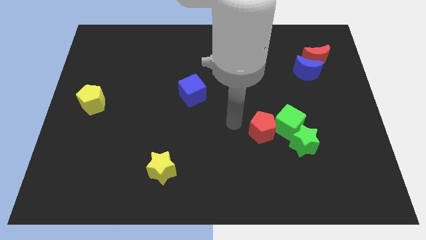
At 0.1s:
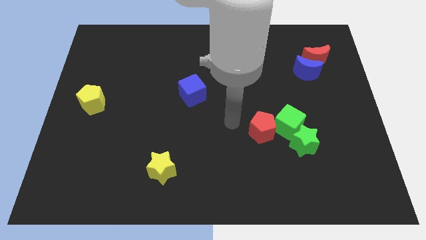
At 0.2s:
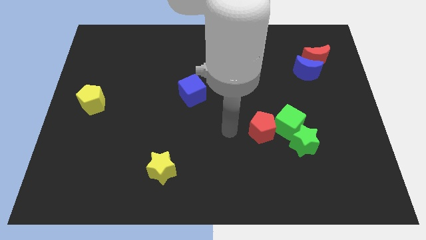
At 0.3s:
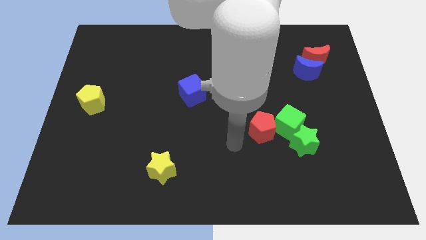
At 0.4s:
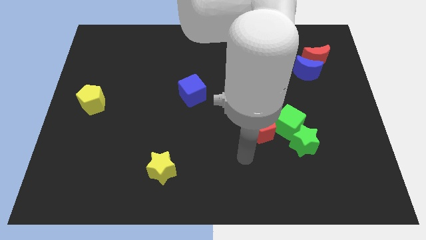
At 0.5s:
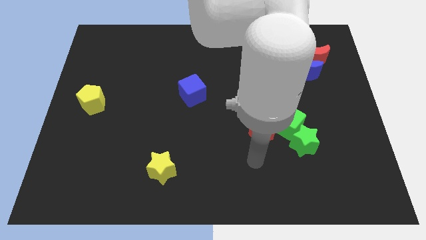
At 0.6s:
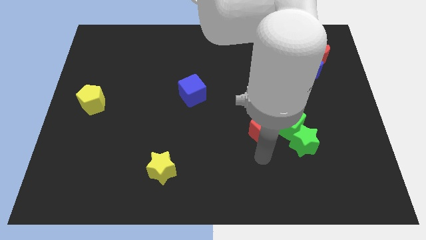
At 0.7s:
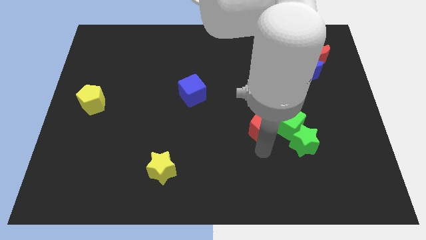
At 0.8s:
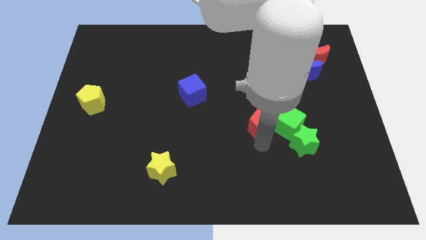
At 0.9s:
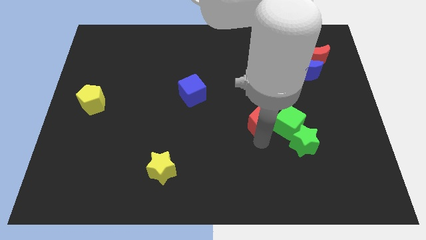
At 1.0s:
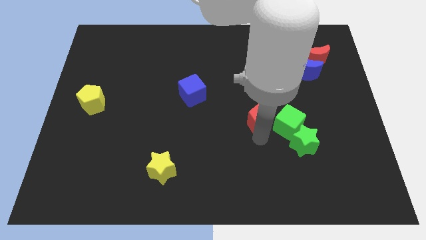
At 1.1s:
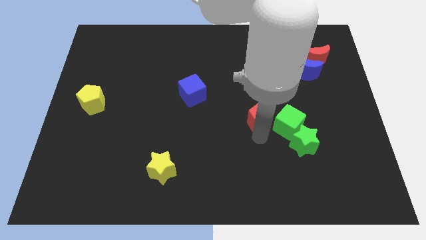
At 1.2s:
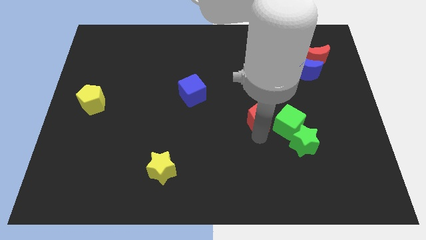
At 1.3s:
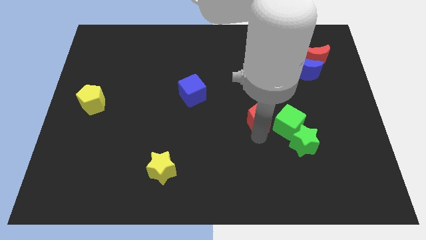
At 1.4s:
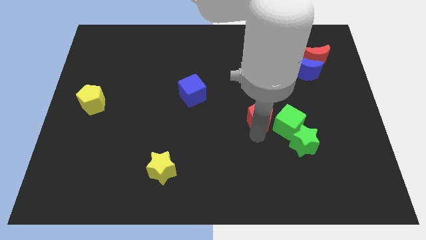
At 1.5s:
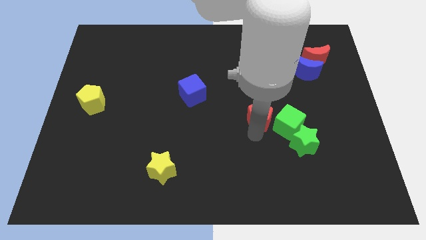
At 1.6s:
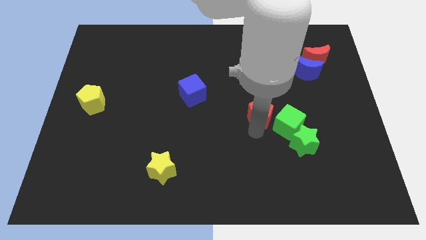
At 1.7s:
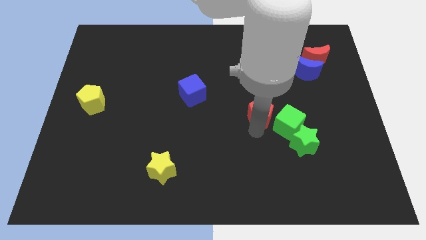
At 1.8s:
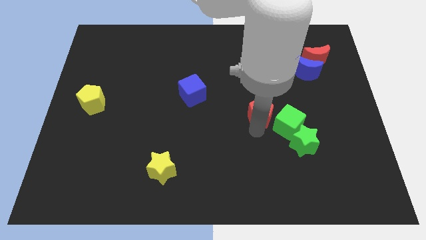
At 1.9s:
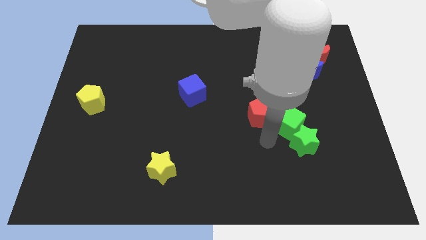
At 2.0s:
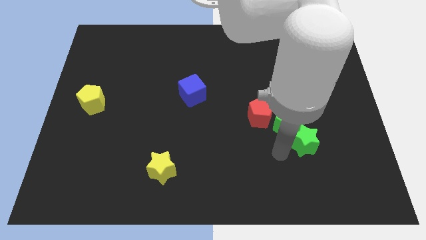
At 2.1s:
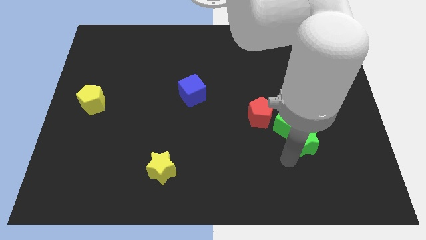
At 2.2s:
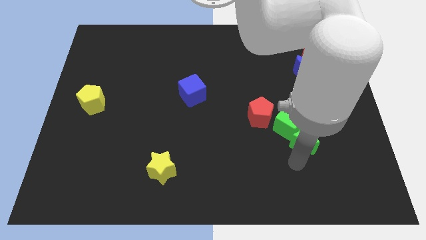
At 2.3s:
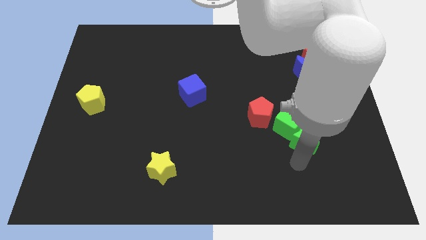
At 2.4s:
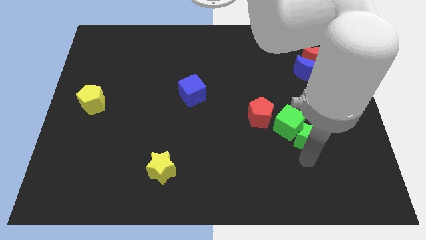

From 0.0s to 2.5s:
move the red pentagon slightly up

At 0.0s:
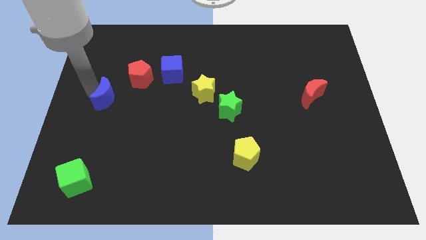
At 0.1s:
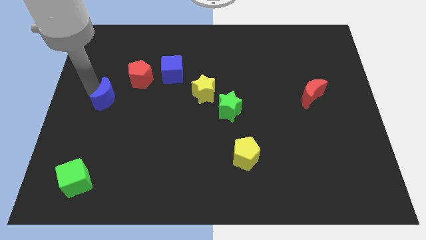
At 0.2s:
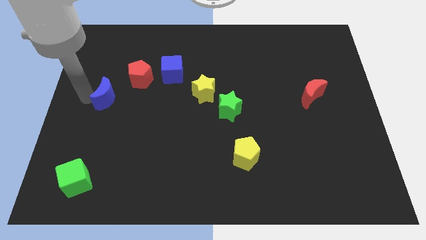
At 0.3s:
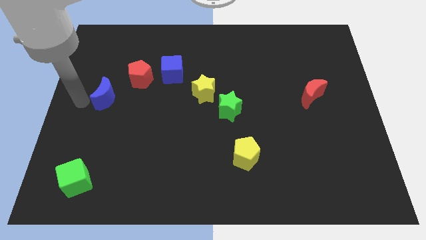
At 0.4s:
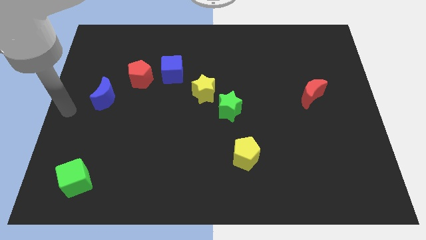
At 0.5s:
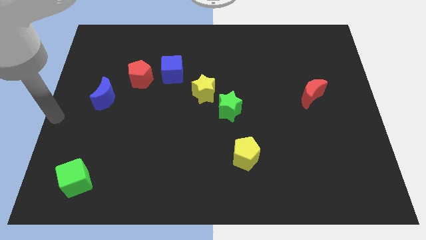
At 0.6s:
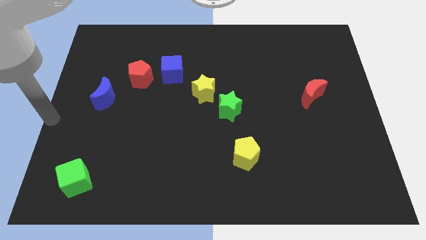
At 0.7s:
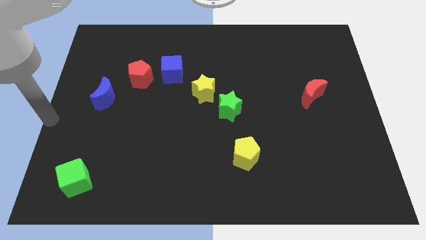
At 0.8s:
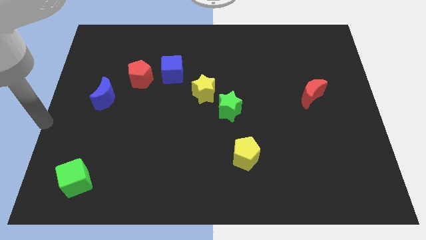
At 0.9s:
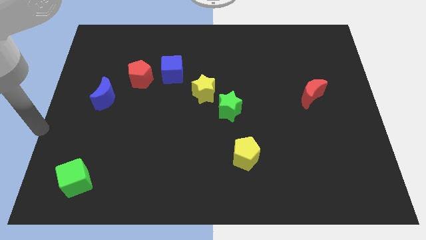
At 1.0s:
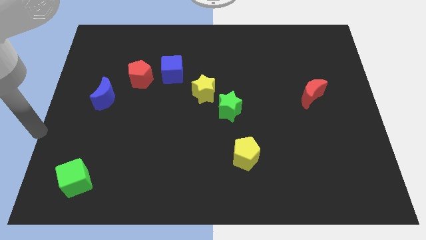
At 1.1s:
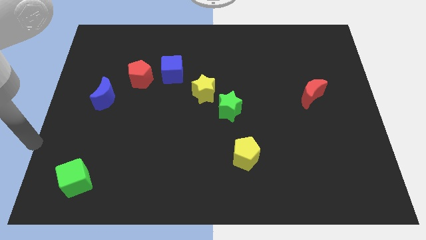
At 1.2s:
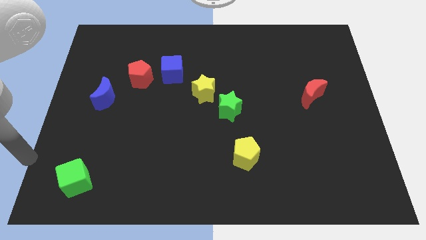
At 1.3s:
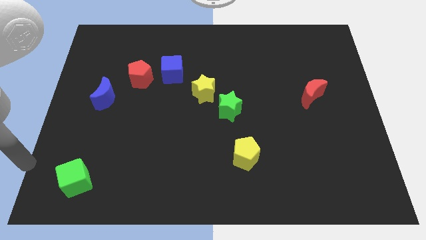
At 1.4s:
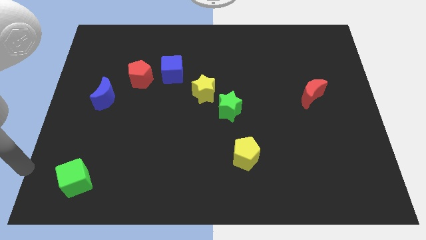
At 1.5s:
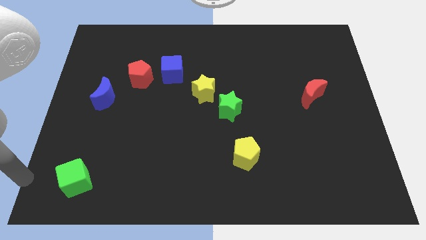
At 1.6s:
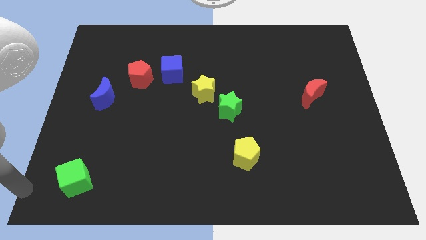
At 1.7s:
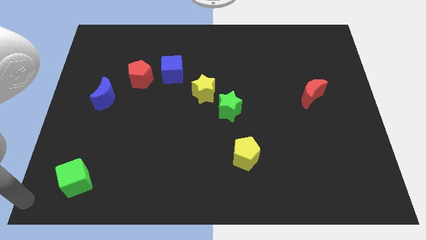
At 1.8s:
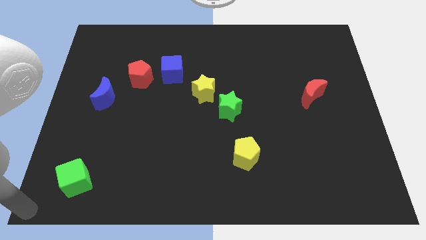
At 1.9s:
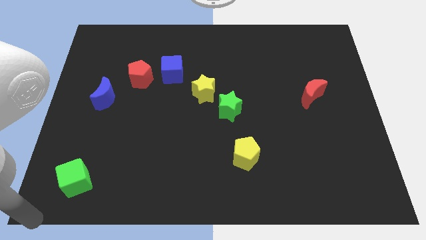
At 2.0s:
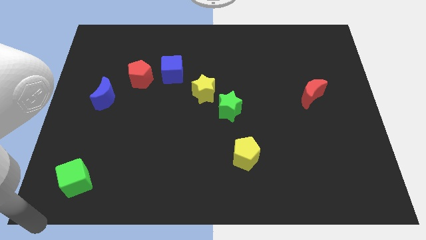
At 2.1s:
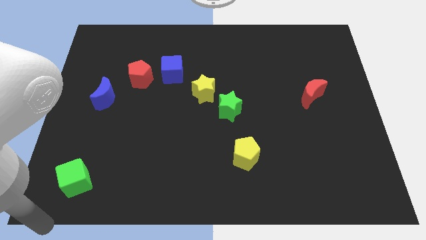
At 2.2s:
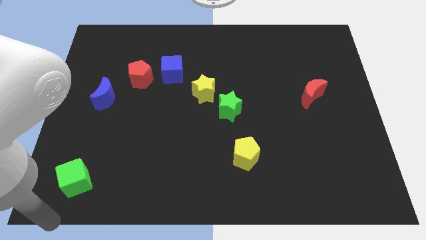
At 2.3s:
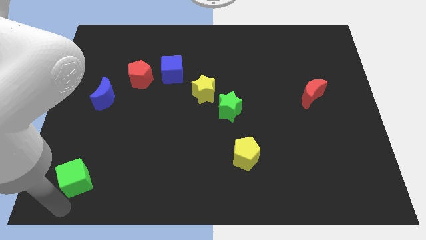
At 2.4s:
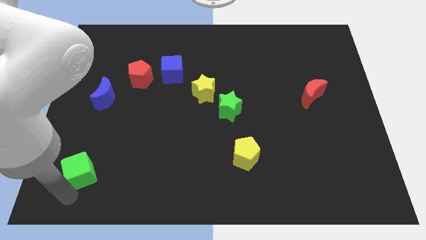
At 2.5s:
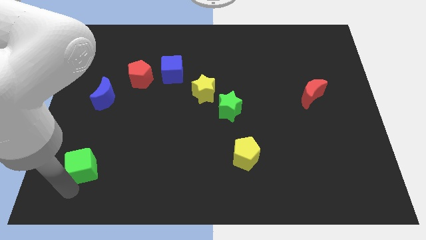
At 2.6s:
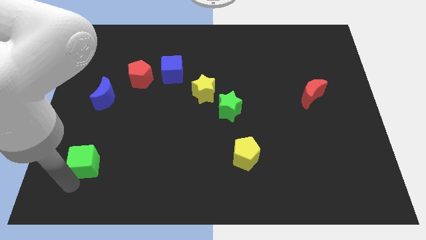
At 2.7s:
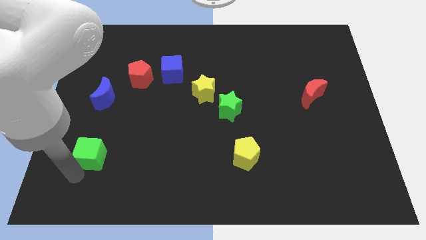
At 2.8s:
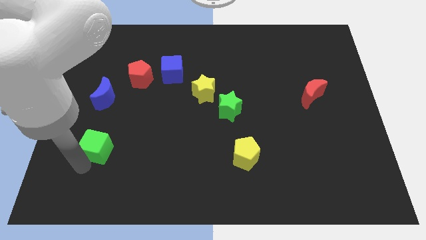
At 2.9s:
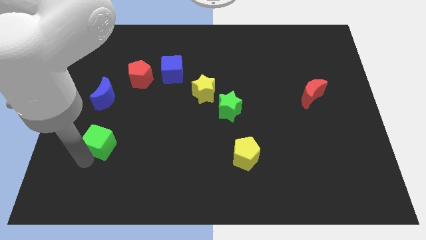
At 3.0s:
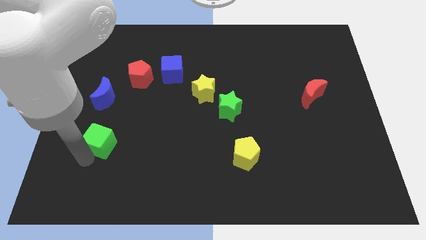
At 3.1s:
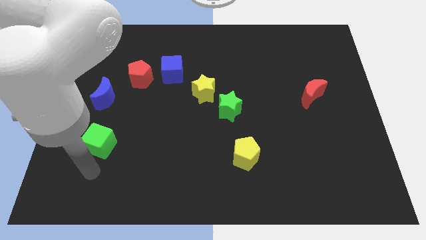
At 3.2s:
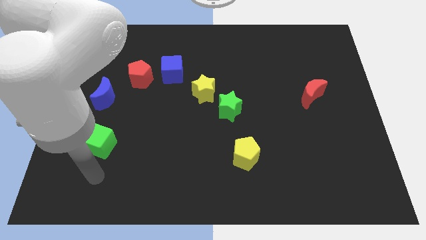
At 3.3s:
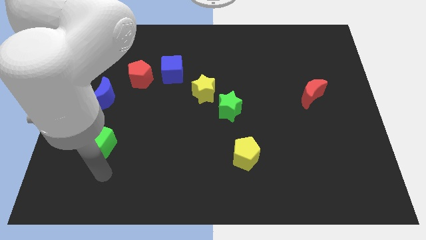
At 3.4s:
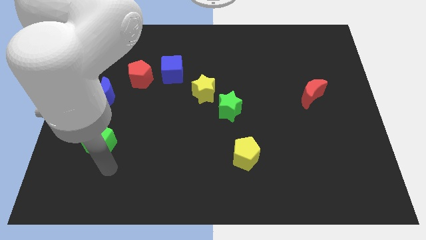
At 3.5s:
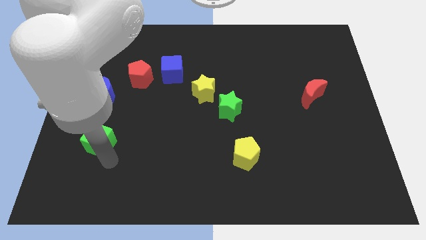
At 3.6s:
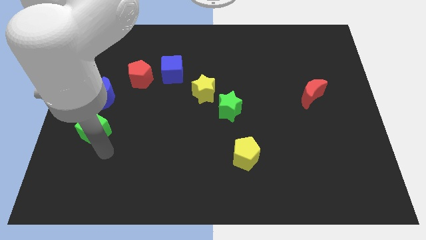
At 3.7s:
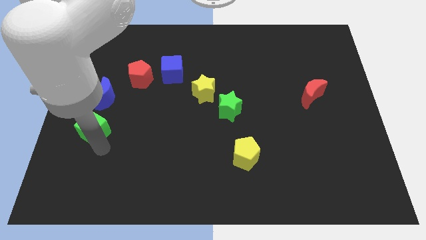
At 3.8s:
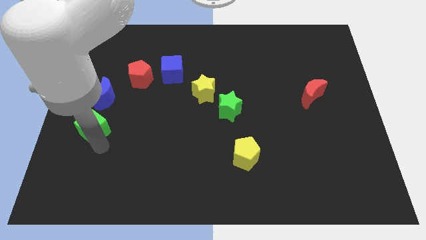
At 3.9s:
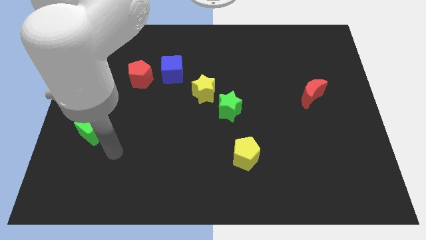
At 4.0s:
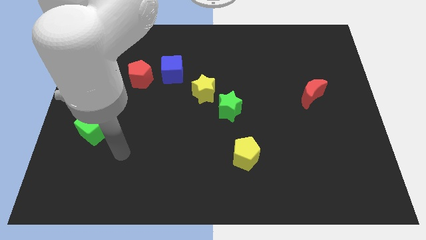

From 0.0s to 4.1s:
move the green cube to the bottom side of the blue moon

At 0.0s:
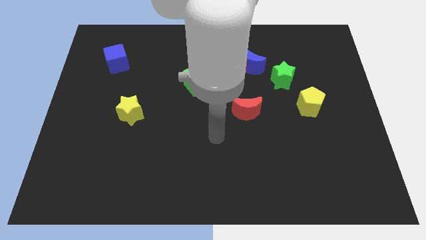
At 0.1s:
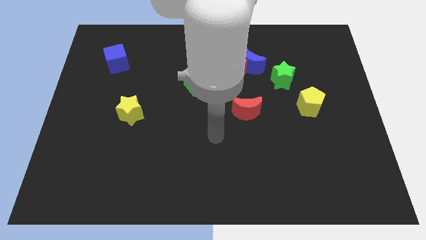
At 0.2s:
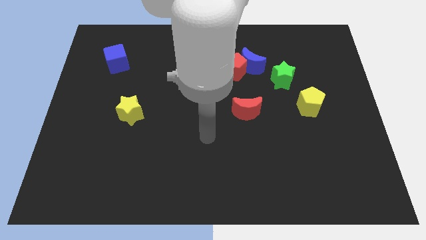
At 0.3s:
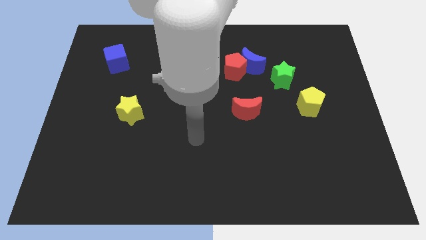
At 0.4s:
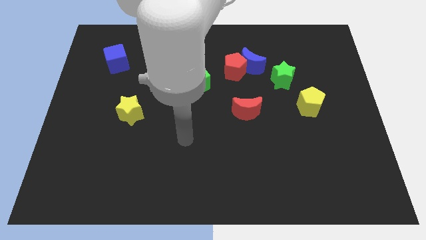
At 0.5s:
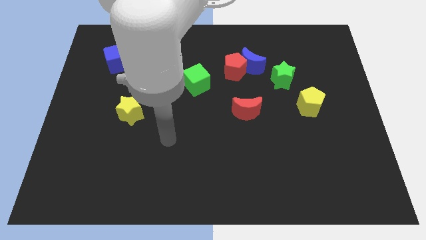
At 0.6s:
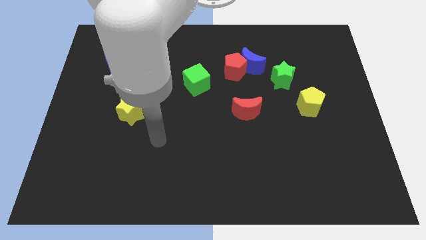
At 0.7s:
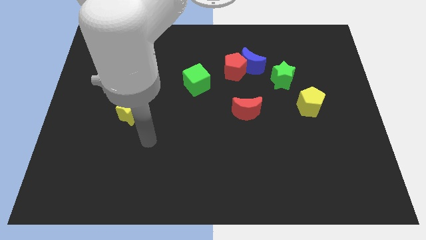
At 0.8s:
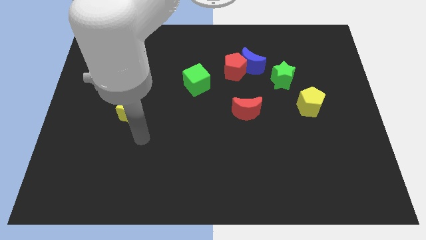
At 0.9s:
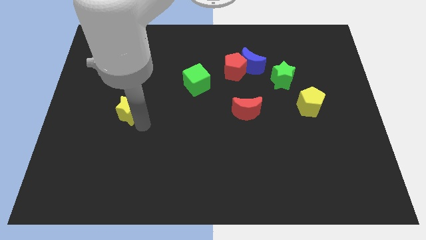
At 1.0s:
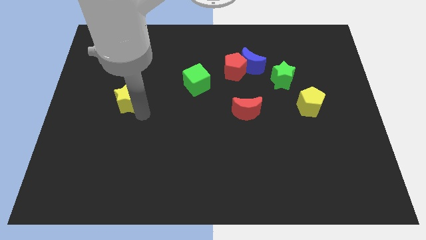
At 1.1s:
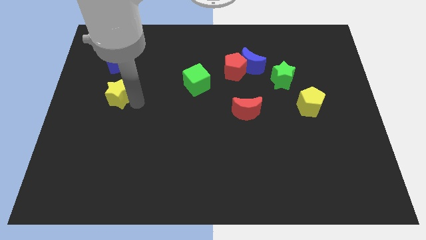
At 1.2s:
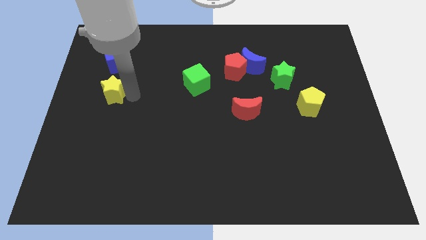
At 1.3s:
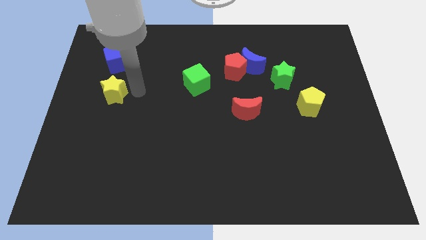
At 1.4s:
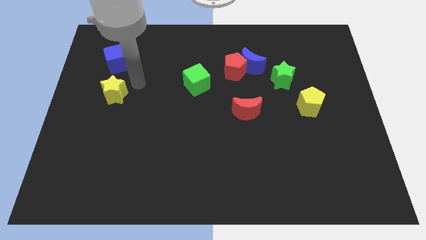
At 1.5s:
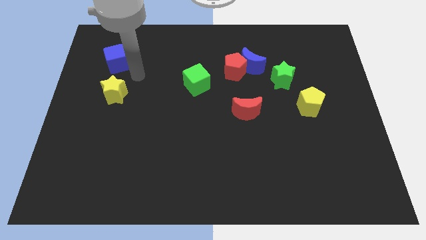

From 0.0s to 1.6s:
move the yellow star below the blue cube

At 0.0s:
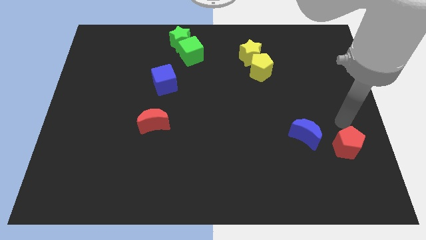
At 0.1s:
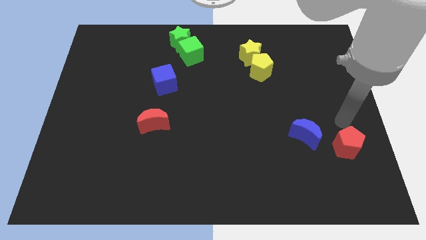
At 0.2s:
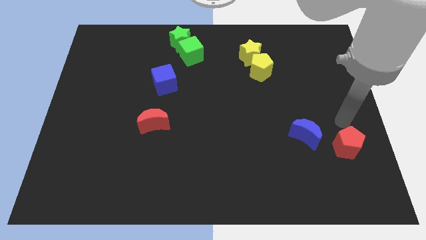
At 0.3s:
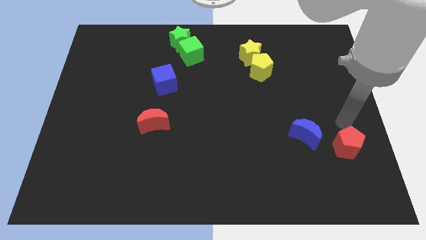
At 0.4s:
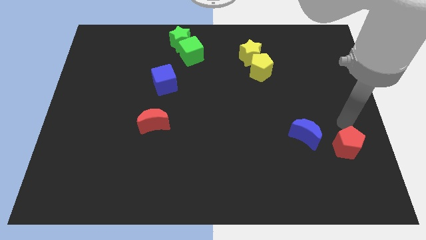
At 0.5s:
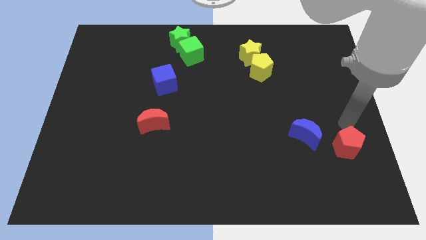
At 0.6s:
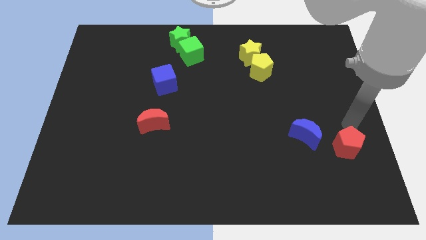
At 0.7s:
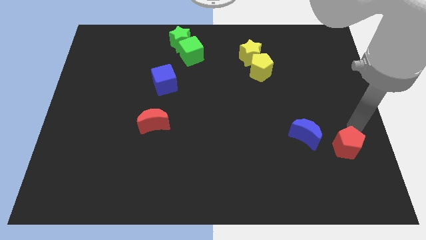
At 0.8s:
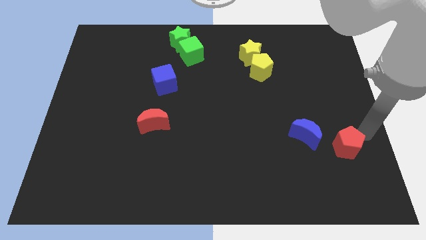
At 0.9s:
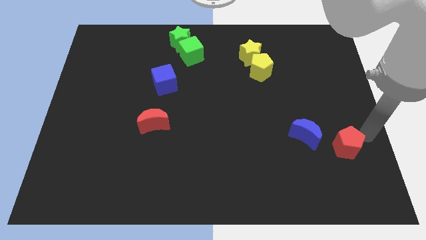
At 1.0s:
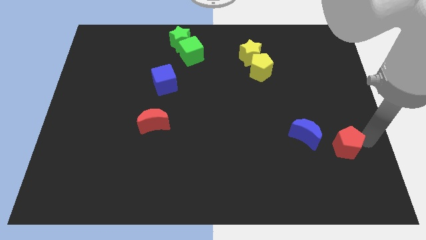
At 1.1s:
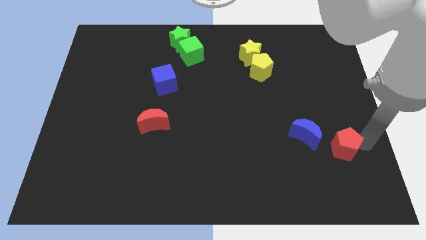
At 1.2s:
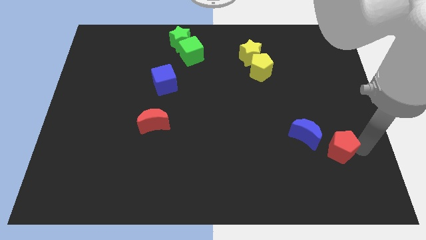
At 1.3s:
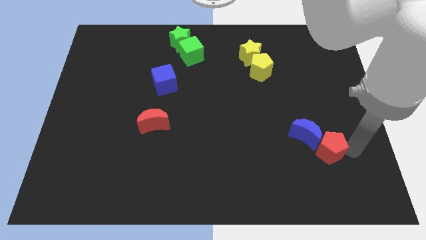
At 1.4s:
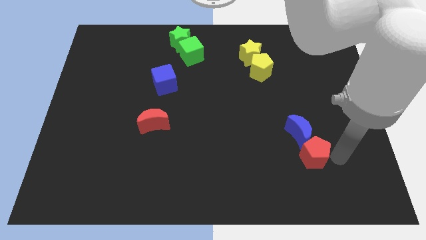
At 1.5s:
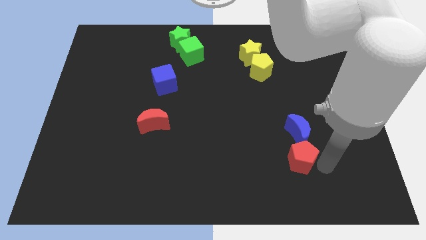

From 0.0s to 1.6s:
move the red pentagon to the bottom of the blue crescent
